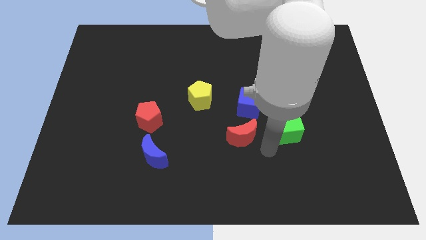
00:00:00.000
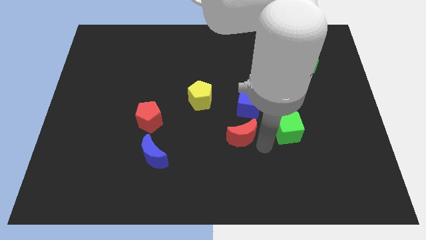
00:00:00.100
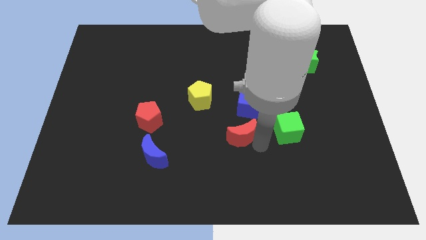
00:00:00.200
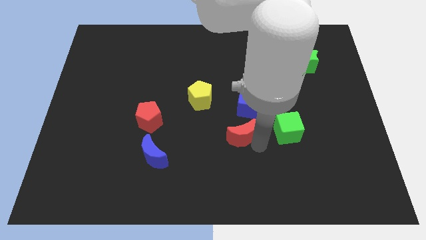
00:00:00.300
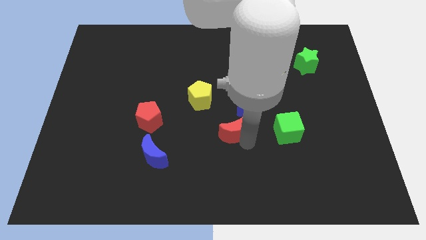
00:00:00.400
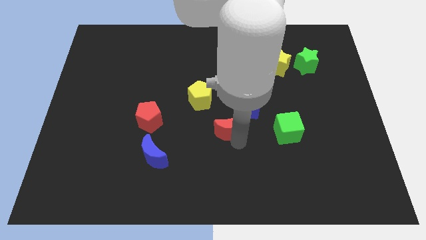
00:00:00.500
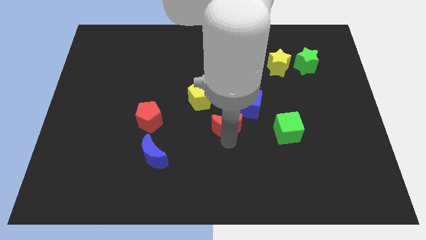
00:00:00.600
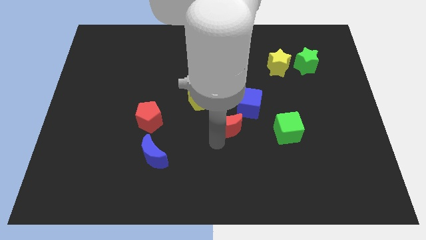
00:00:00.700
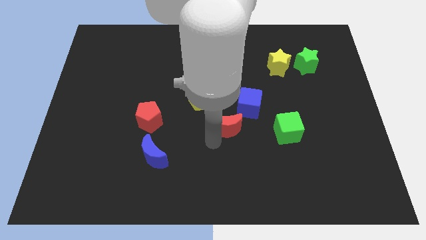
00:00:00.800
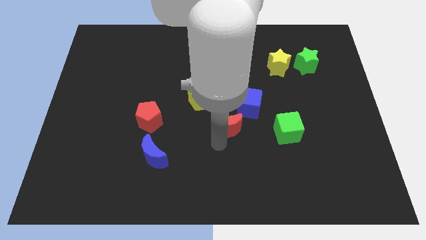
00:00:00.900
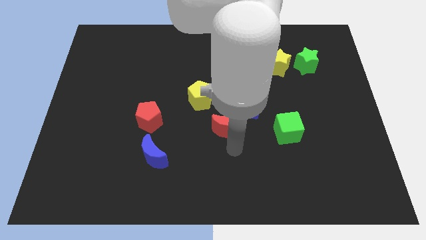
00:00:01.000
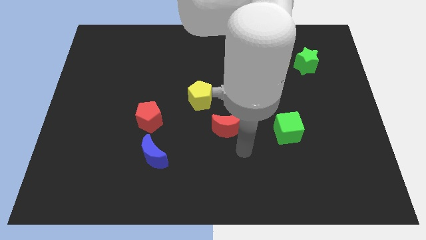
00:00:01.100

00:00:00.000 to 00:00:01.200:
place the red crescent below the blue cube

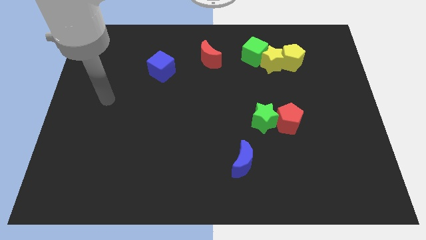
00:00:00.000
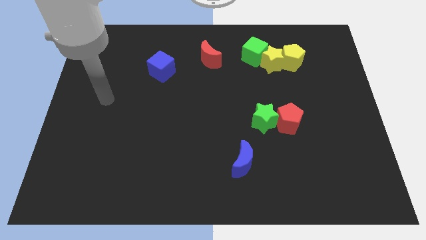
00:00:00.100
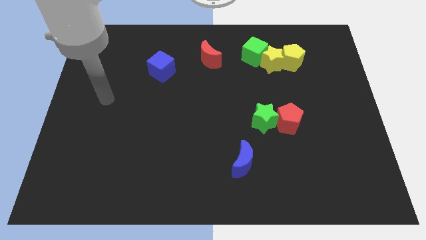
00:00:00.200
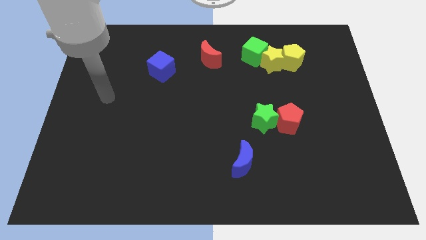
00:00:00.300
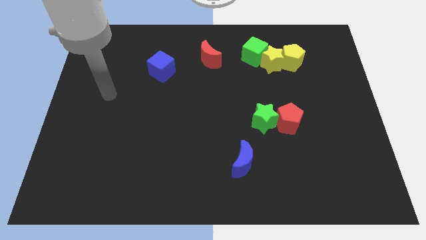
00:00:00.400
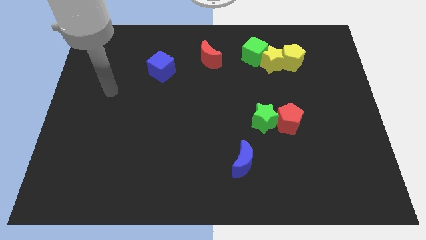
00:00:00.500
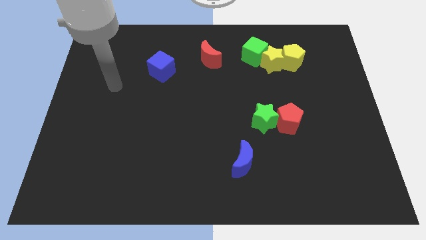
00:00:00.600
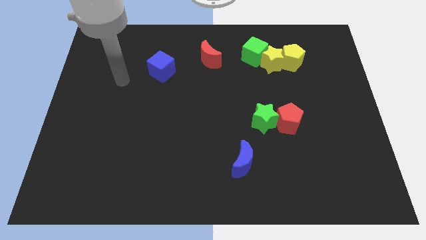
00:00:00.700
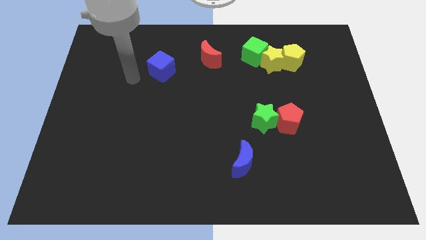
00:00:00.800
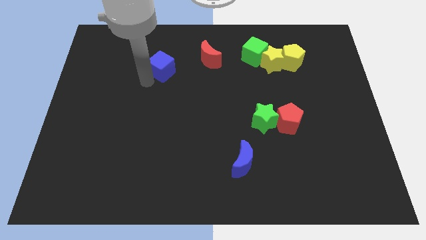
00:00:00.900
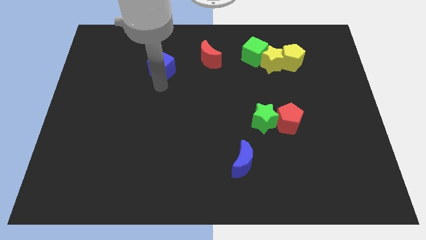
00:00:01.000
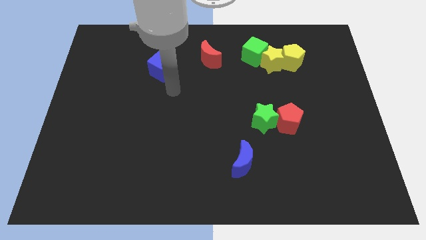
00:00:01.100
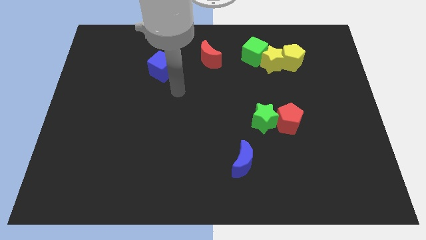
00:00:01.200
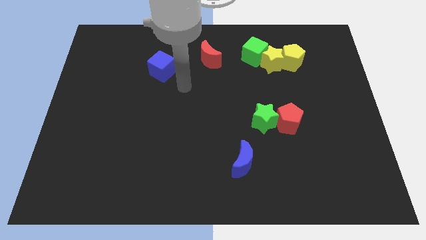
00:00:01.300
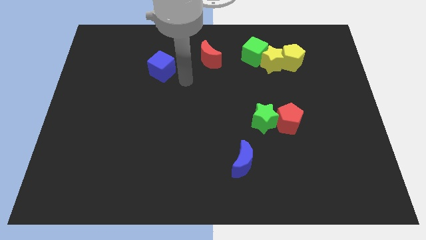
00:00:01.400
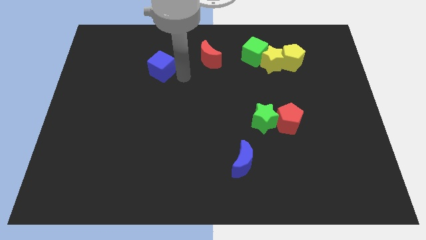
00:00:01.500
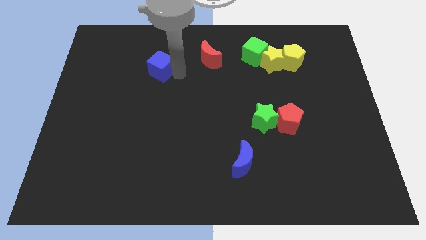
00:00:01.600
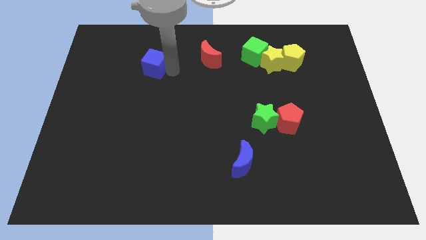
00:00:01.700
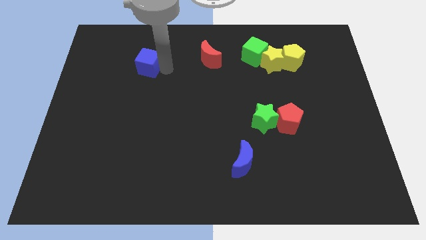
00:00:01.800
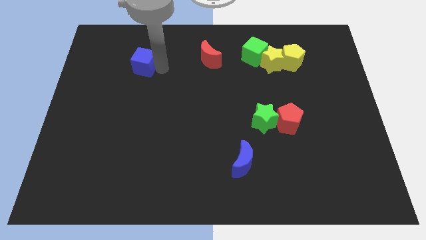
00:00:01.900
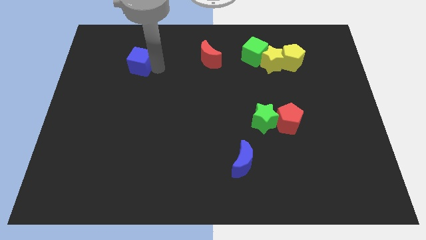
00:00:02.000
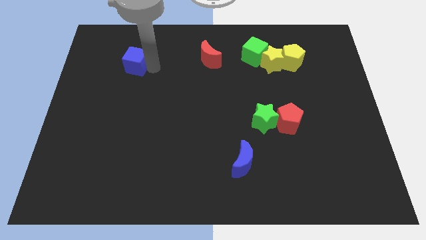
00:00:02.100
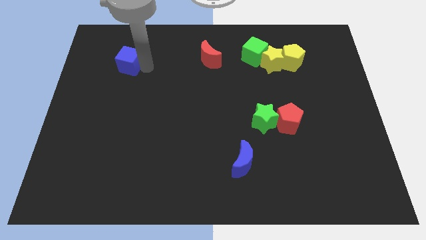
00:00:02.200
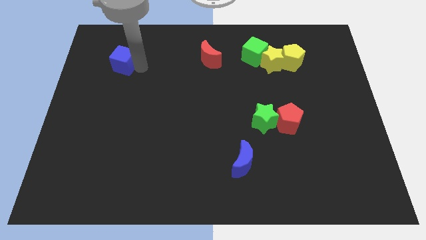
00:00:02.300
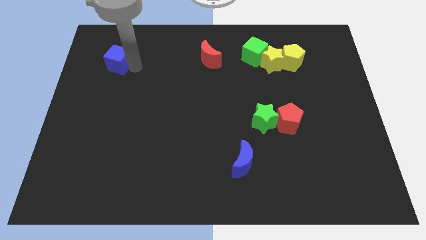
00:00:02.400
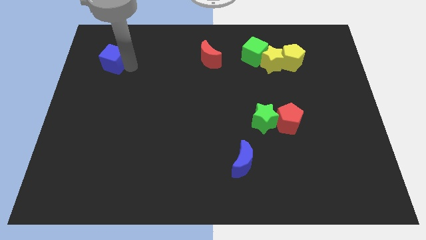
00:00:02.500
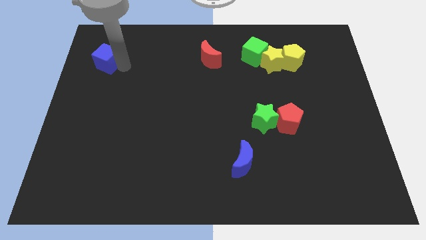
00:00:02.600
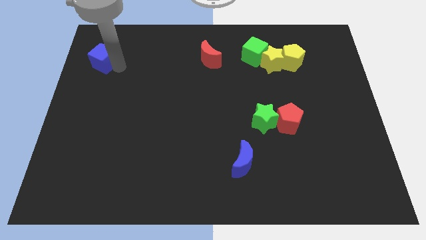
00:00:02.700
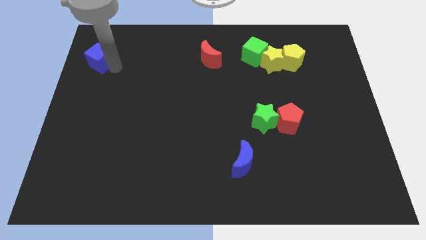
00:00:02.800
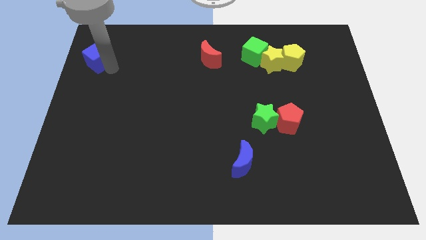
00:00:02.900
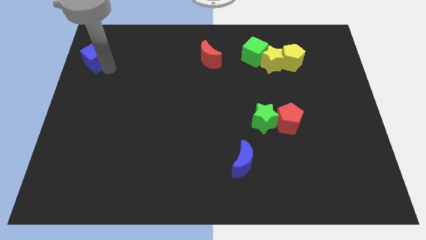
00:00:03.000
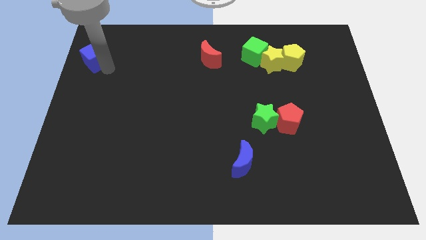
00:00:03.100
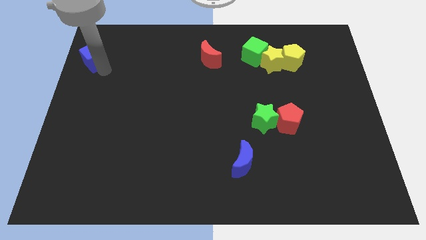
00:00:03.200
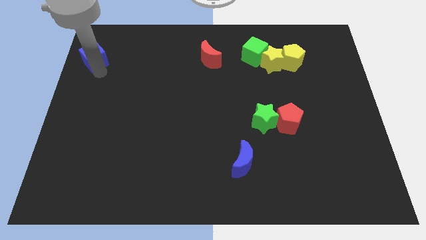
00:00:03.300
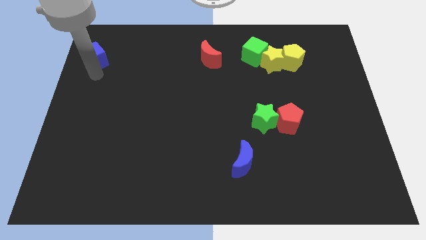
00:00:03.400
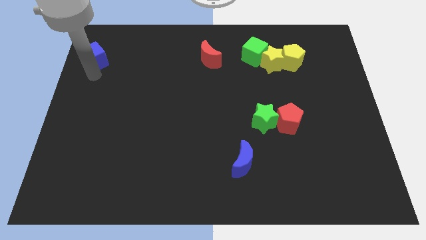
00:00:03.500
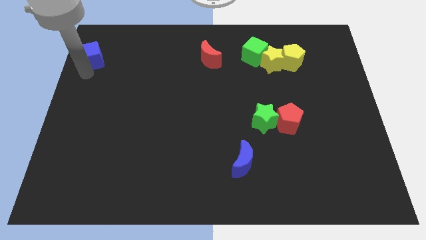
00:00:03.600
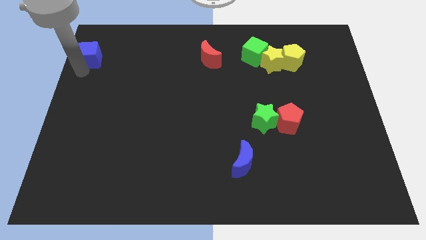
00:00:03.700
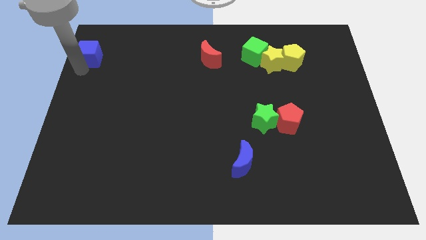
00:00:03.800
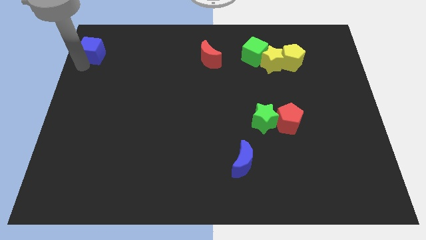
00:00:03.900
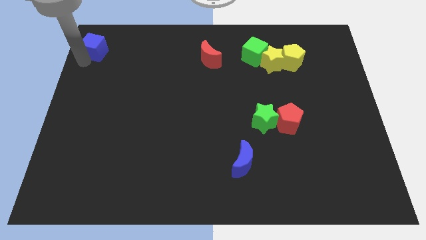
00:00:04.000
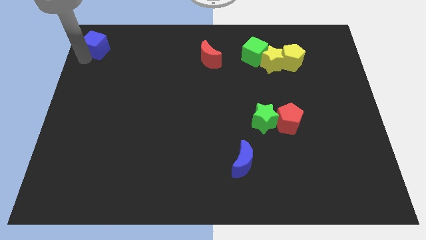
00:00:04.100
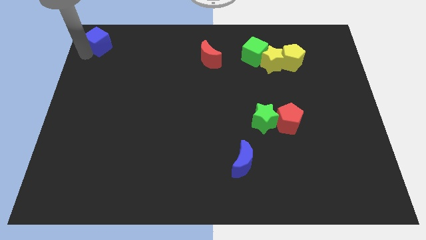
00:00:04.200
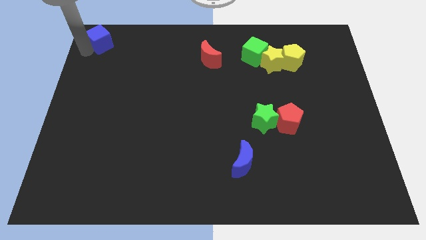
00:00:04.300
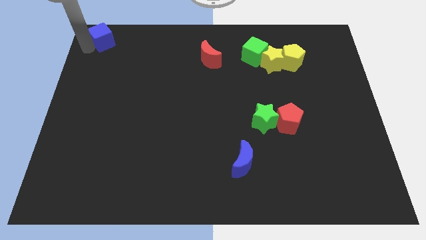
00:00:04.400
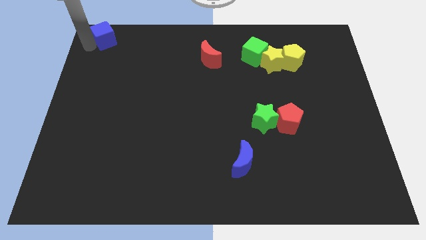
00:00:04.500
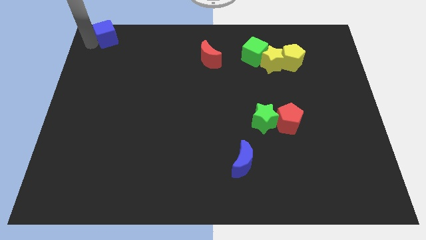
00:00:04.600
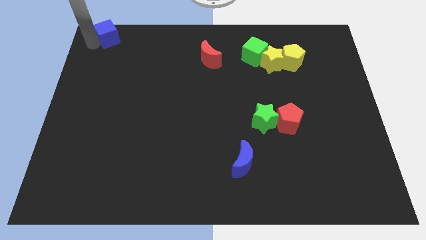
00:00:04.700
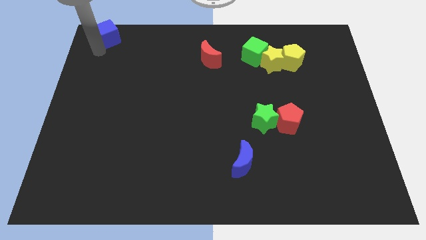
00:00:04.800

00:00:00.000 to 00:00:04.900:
push the blue cube near to the top left corner

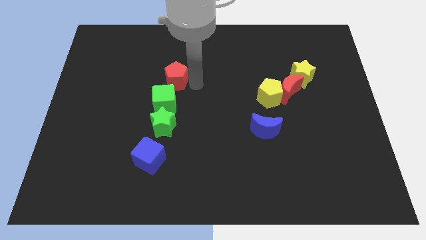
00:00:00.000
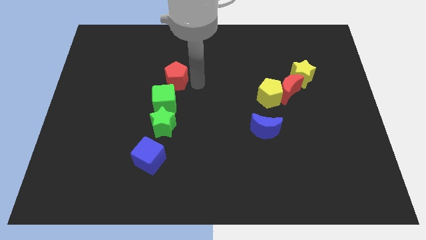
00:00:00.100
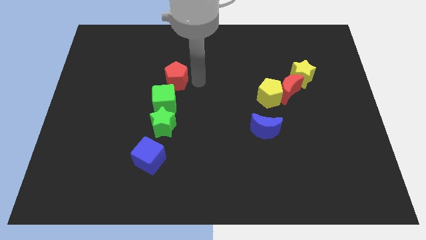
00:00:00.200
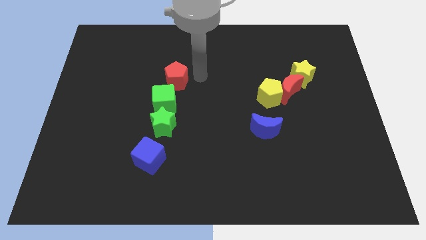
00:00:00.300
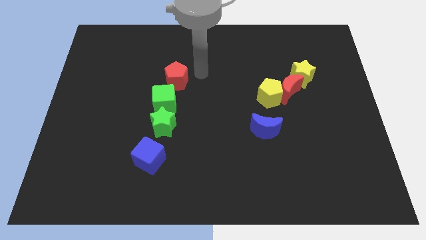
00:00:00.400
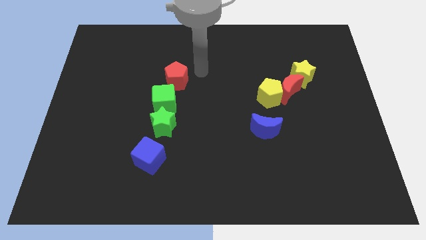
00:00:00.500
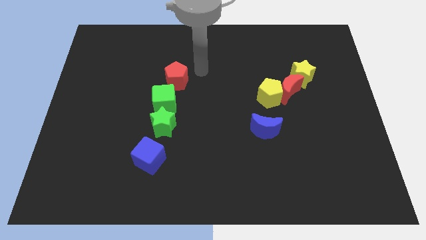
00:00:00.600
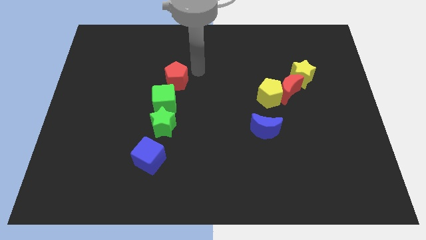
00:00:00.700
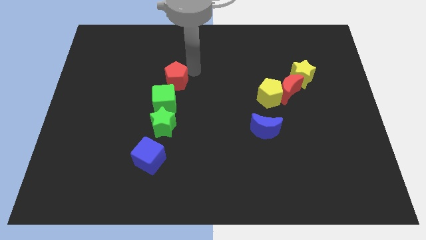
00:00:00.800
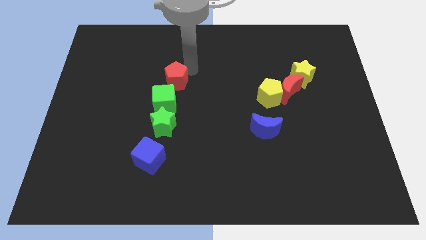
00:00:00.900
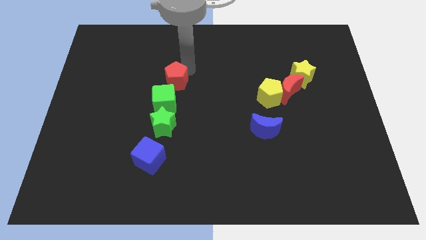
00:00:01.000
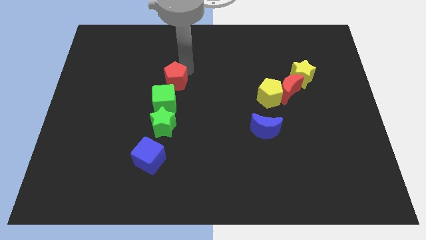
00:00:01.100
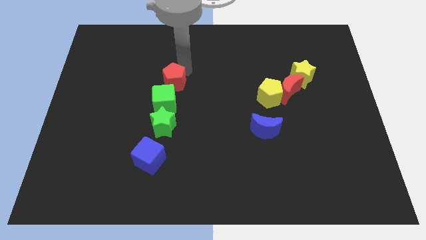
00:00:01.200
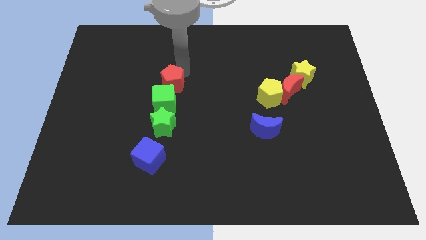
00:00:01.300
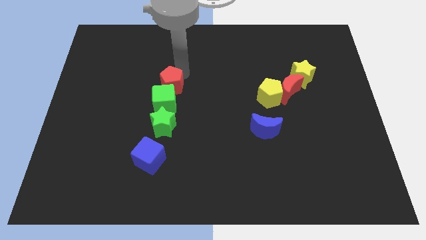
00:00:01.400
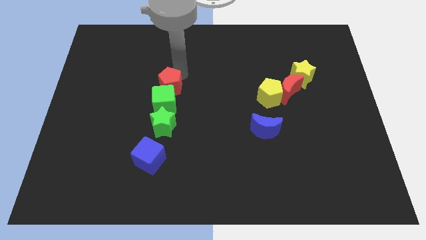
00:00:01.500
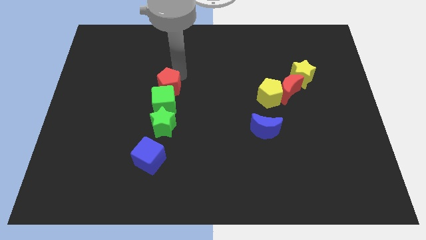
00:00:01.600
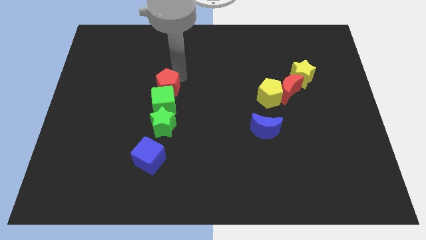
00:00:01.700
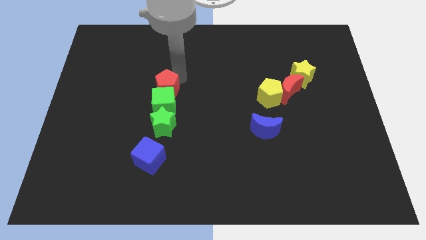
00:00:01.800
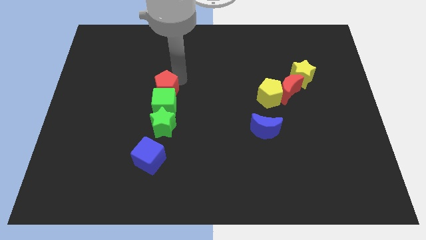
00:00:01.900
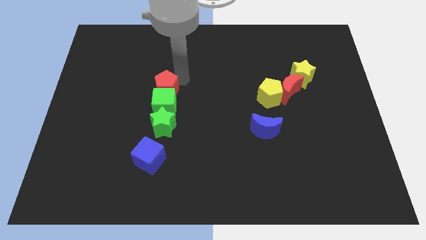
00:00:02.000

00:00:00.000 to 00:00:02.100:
place the red pentagon vertically above the green cube

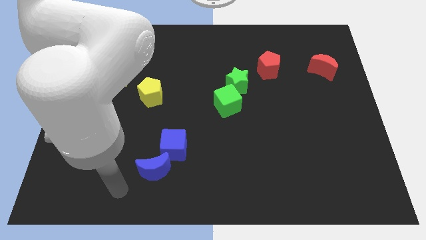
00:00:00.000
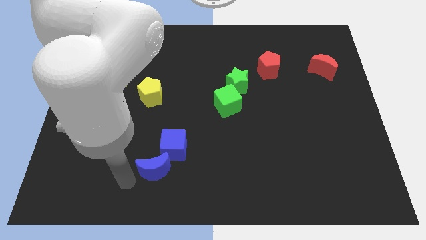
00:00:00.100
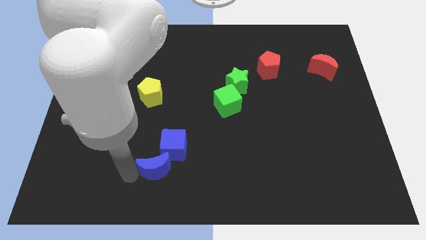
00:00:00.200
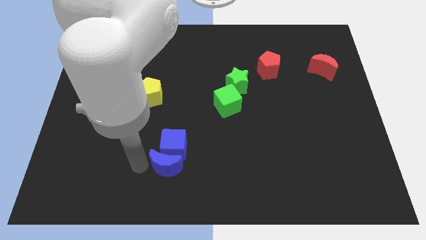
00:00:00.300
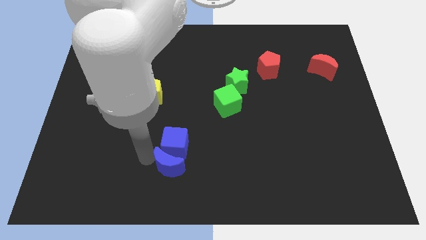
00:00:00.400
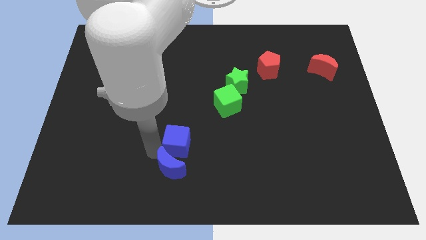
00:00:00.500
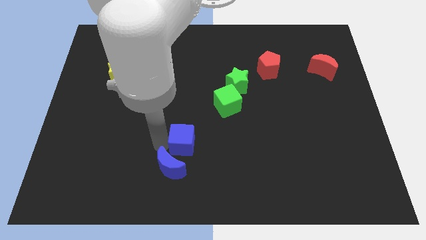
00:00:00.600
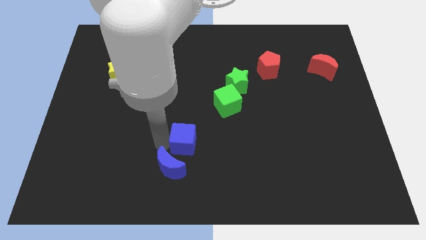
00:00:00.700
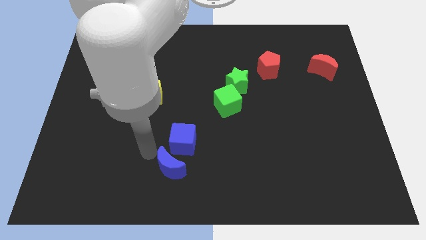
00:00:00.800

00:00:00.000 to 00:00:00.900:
push the blue cube towards the center of the board
